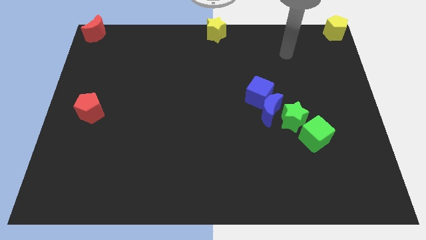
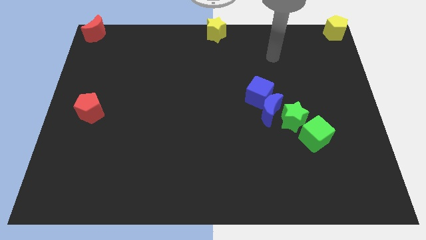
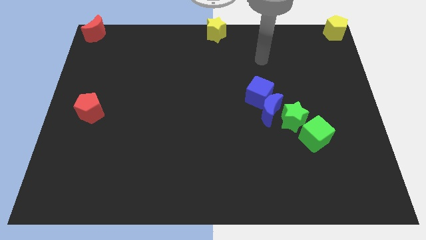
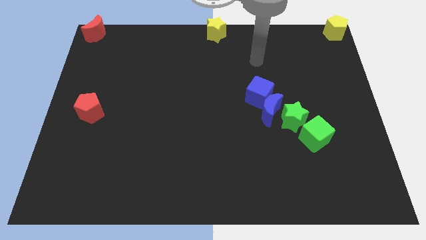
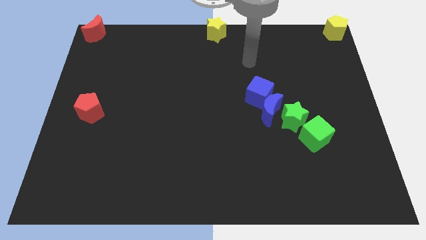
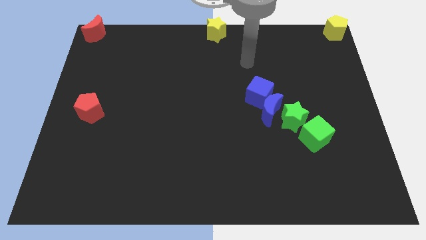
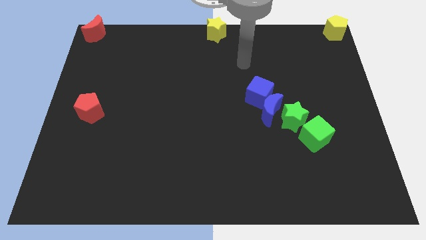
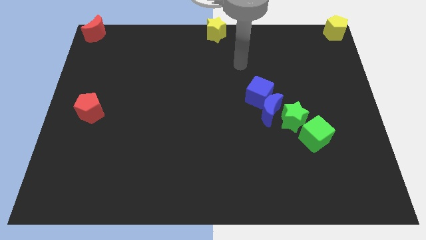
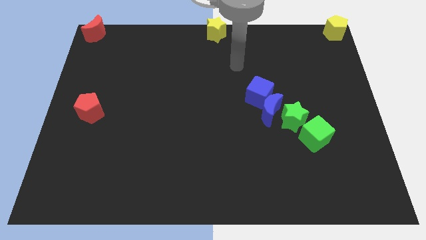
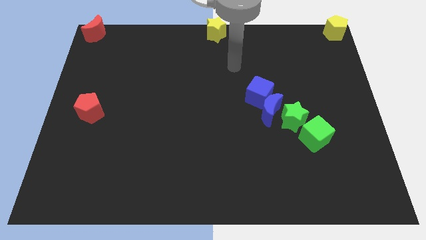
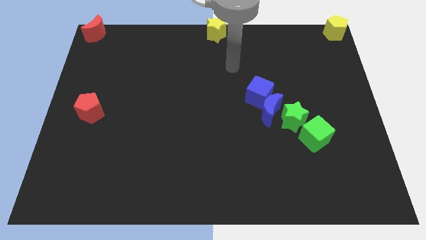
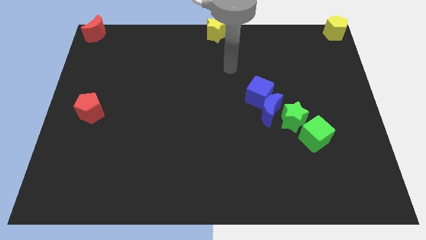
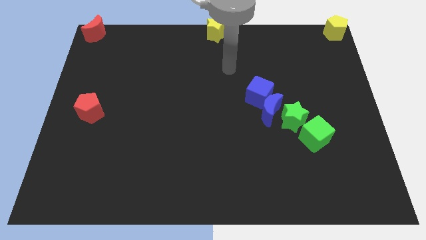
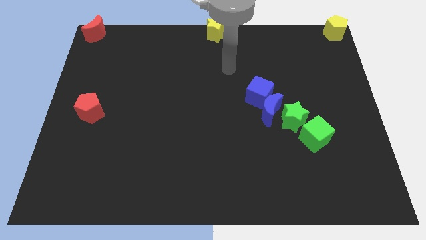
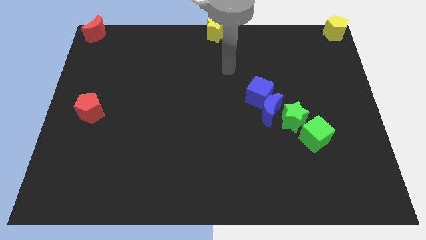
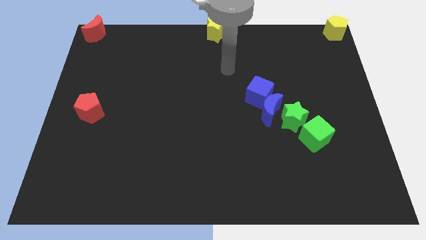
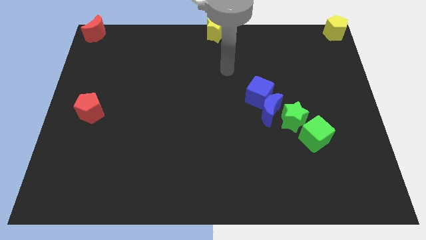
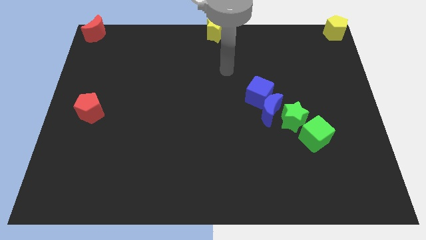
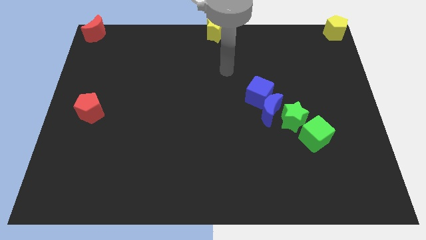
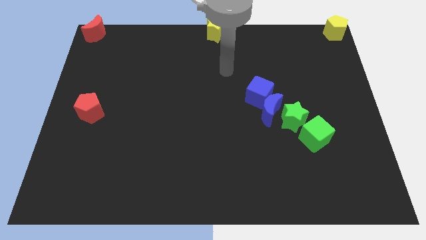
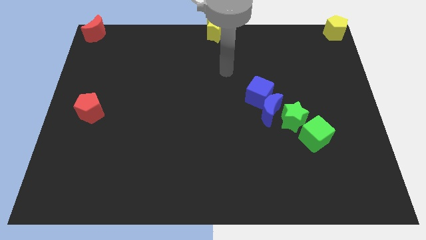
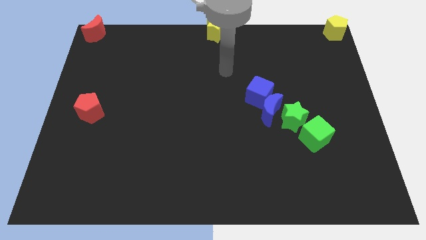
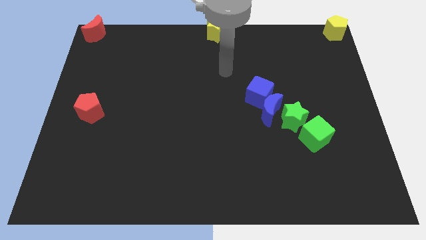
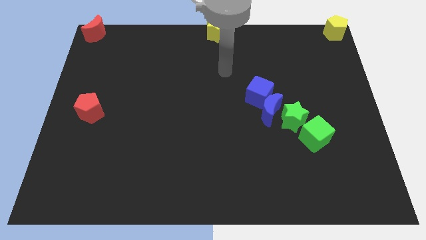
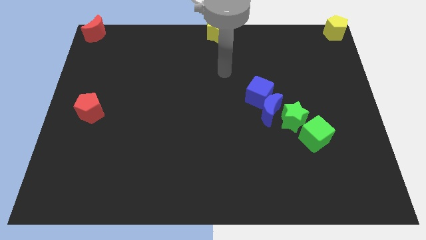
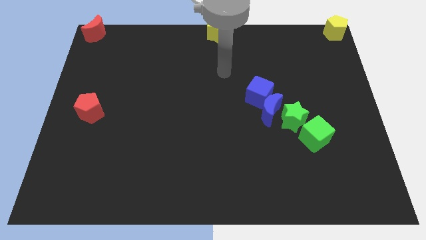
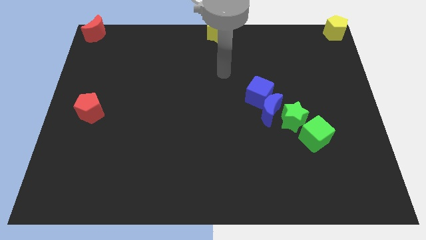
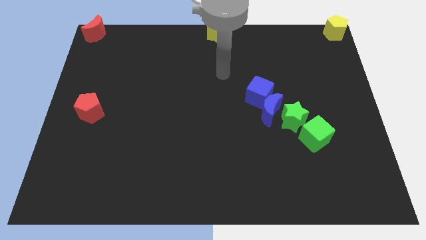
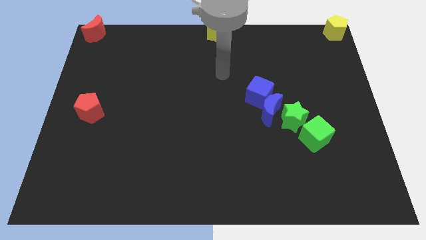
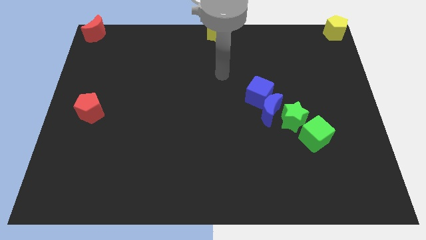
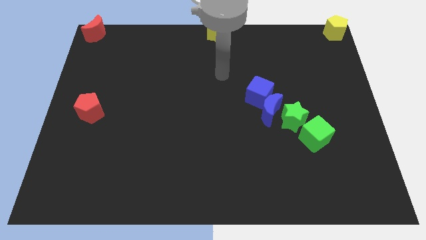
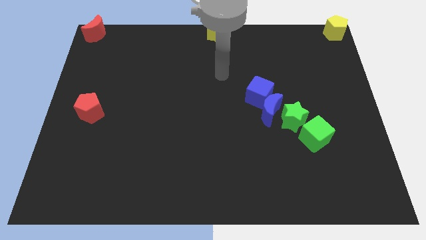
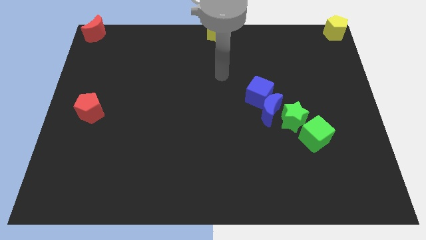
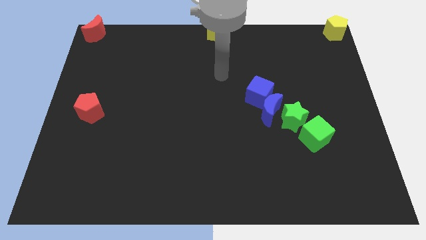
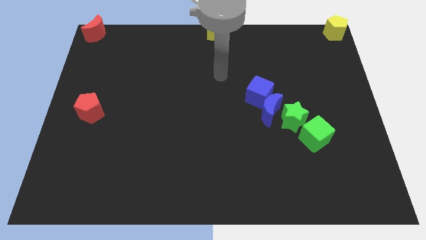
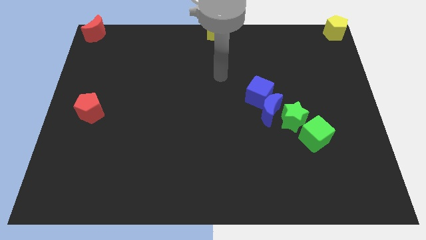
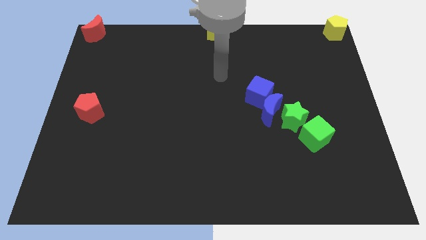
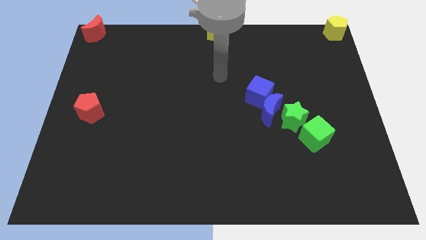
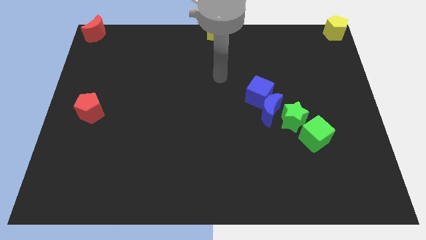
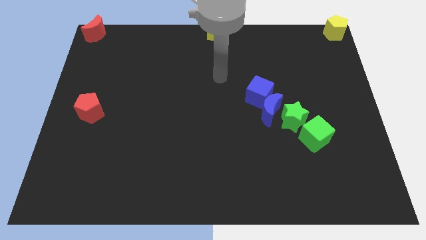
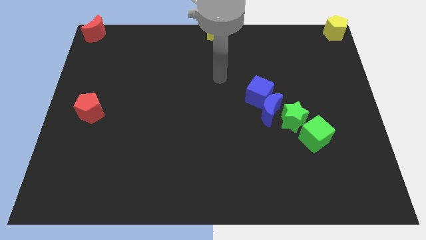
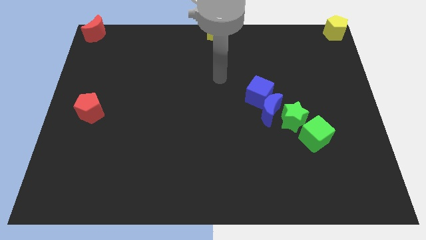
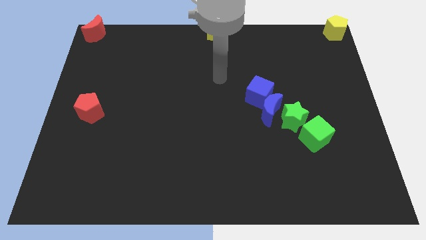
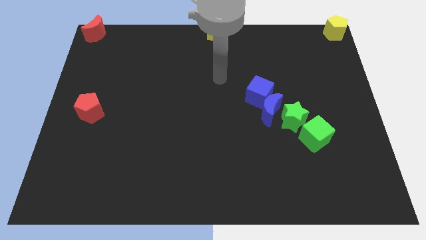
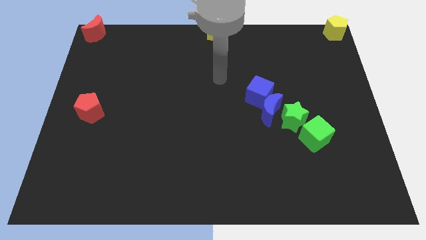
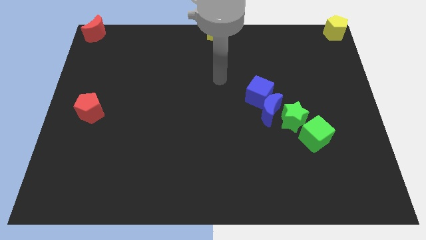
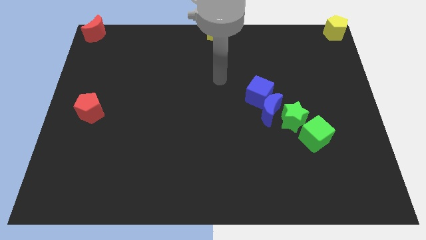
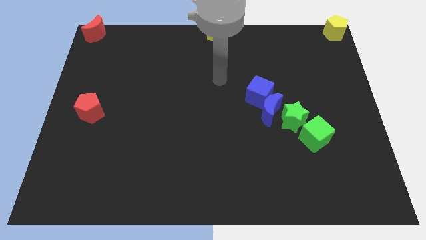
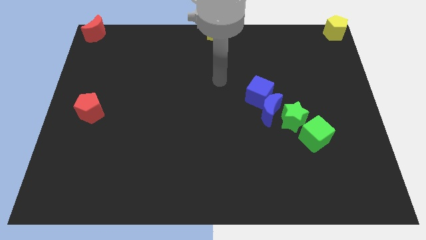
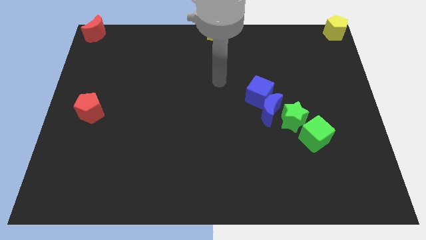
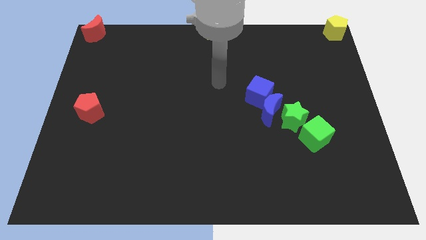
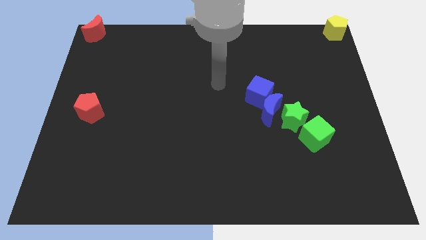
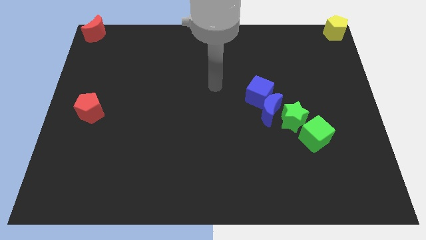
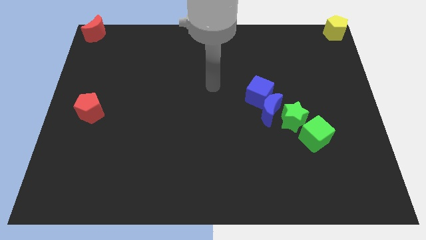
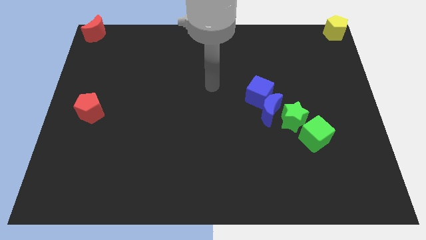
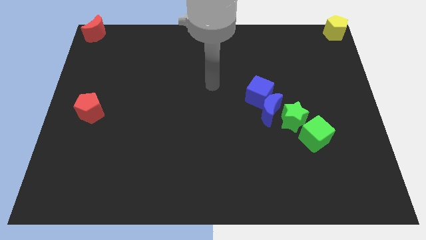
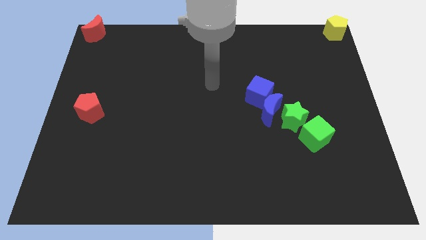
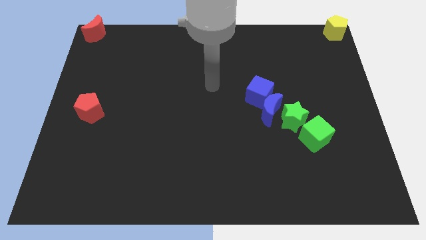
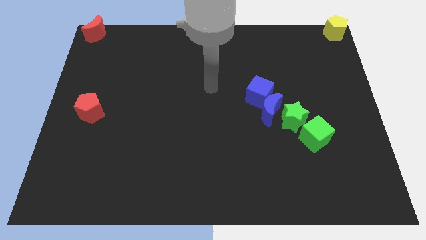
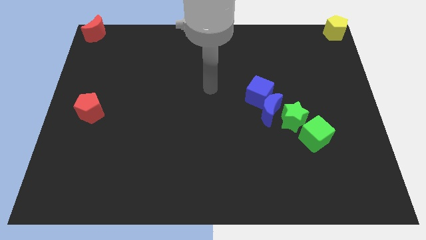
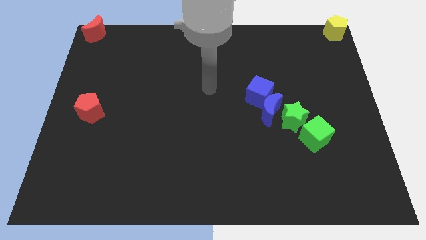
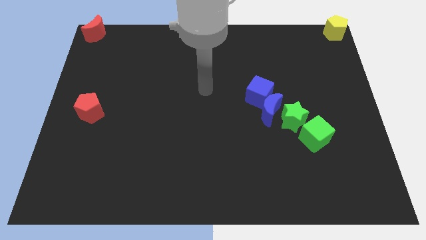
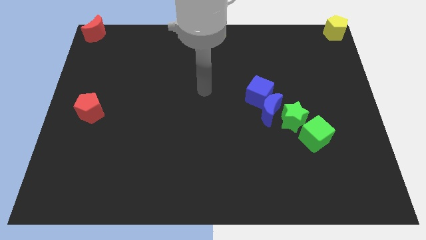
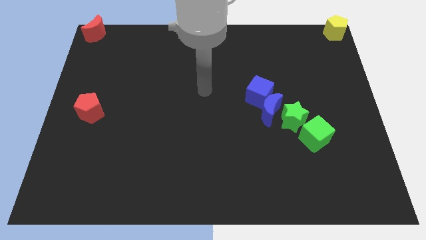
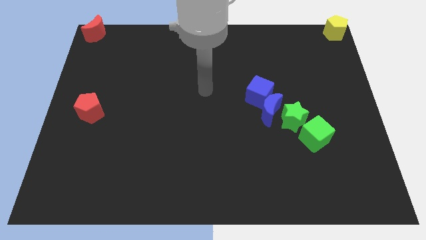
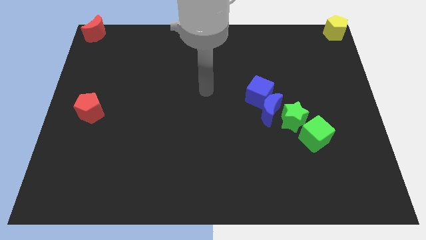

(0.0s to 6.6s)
move your arm to the center of the board

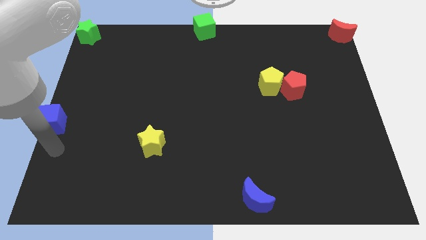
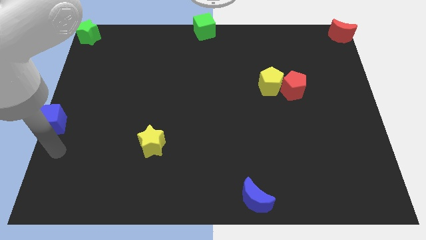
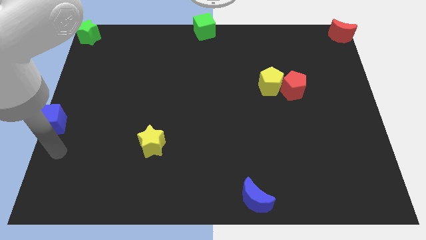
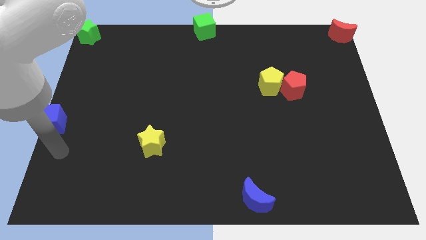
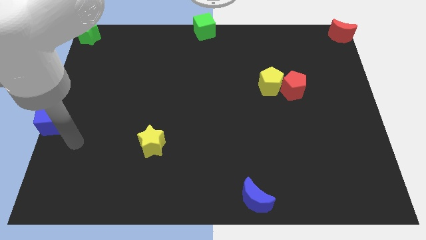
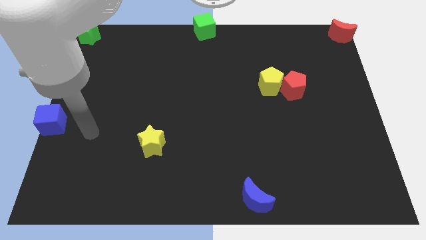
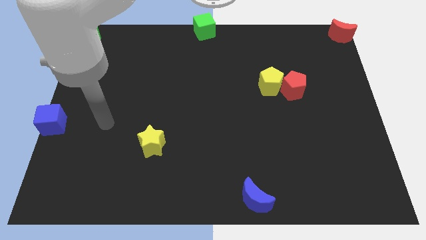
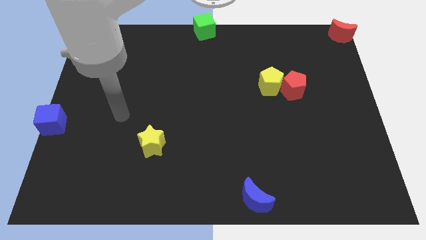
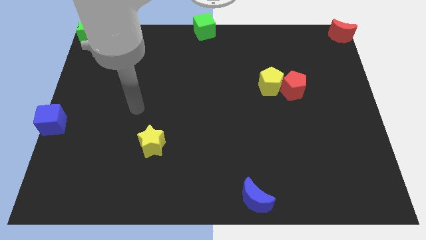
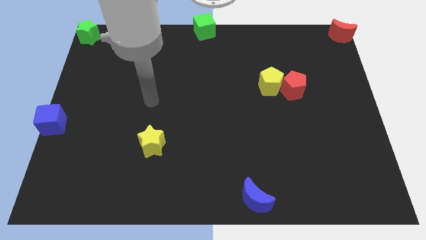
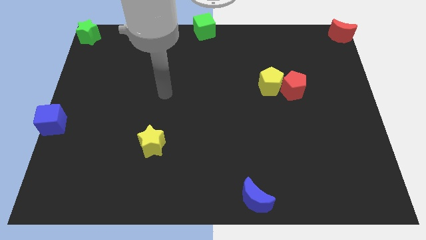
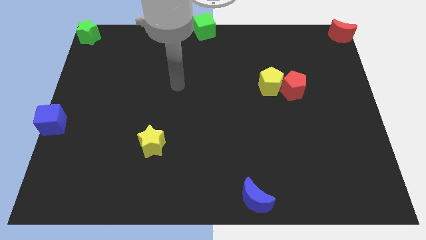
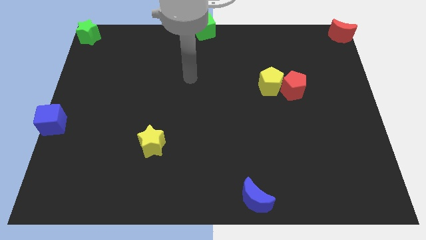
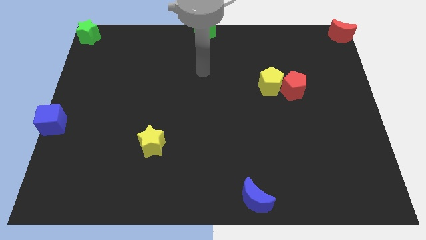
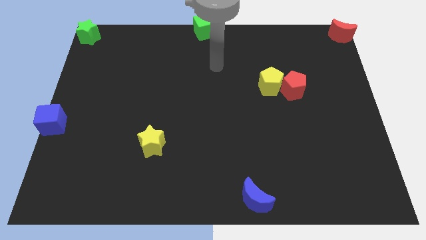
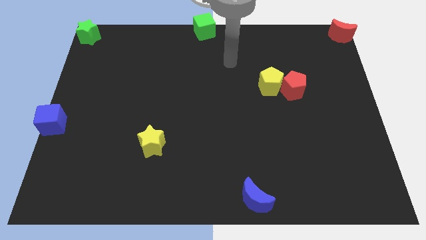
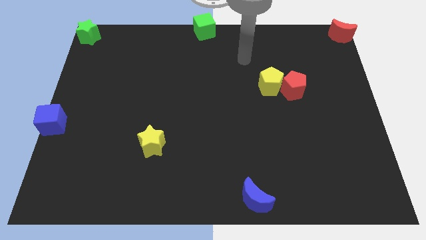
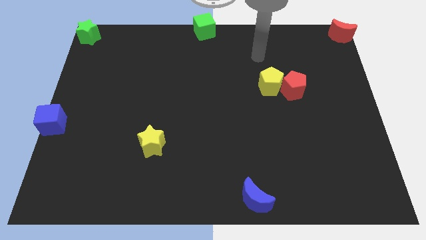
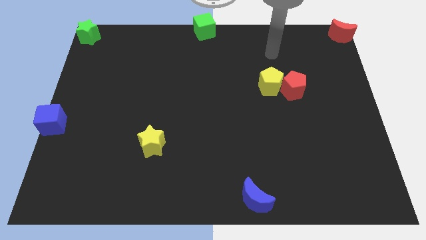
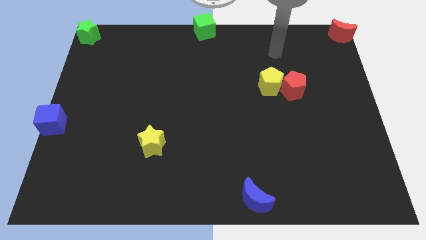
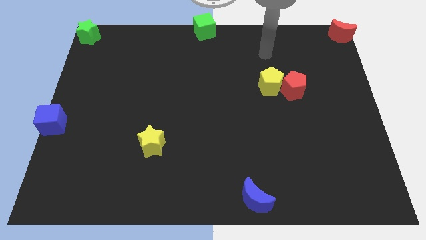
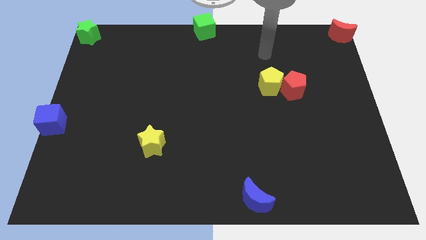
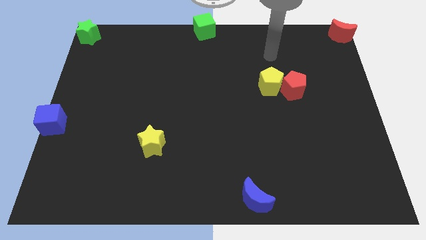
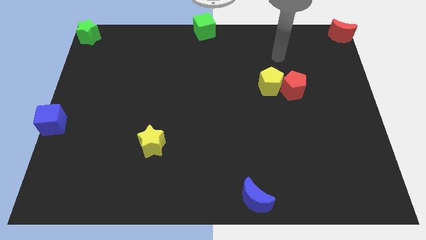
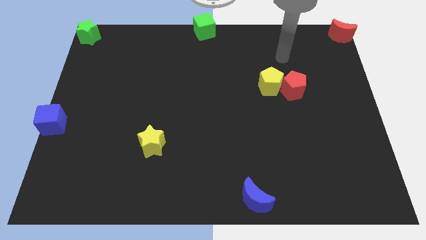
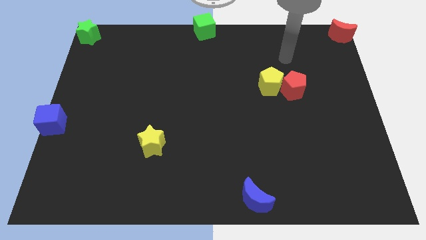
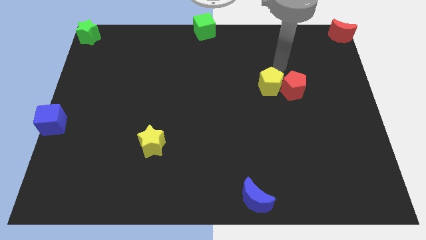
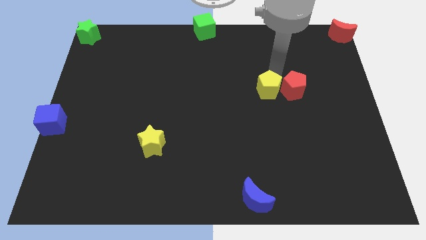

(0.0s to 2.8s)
tap the yellow pentagon
